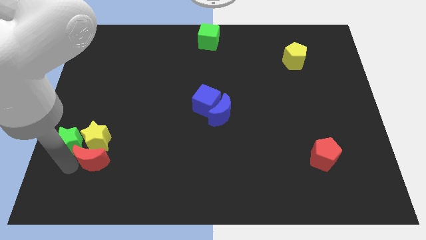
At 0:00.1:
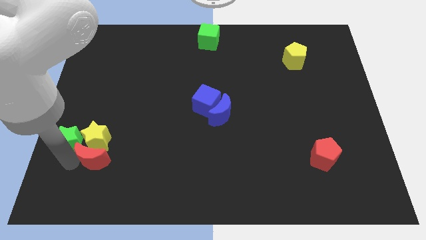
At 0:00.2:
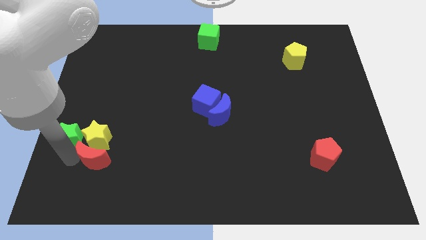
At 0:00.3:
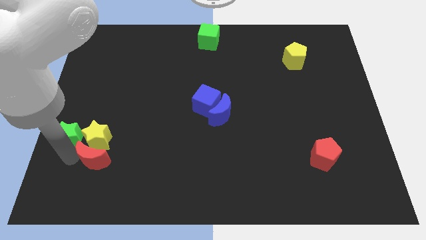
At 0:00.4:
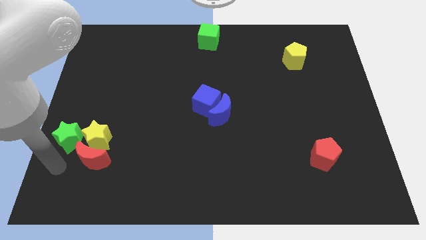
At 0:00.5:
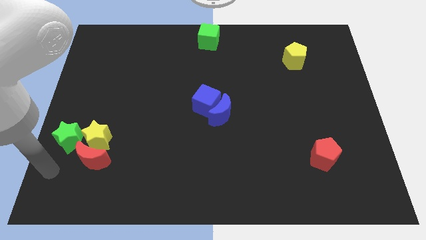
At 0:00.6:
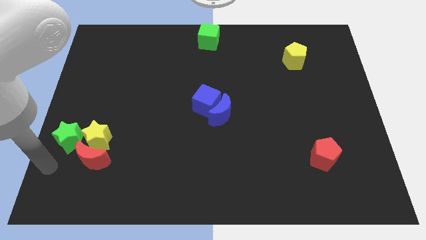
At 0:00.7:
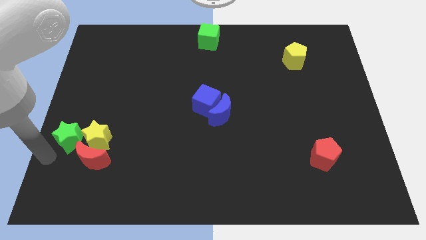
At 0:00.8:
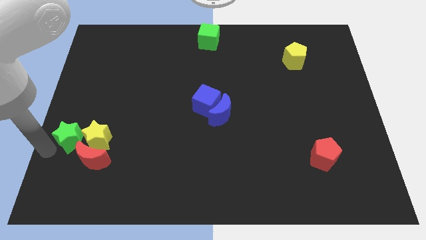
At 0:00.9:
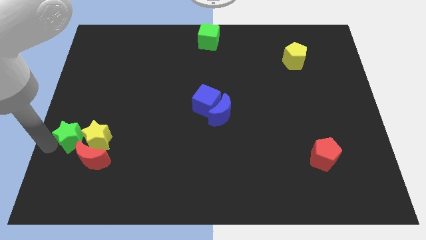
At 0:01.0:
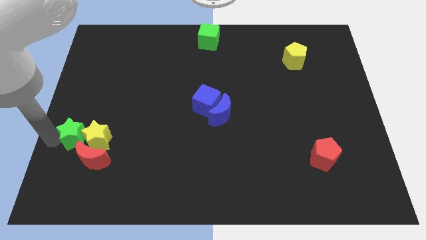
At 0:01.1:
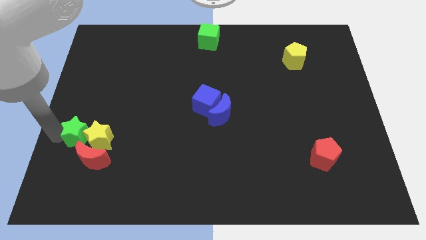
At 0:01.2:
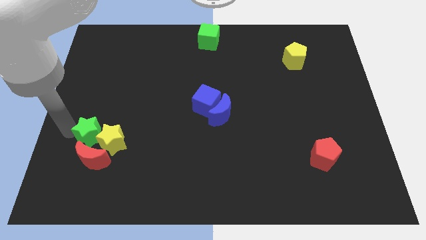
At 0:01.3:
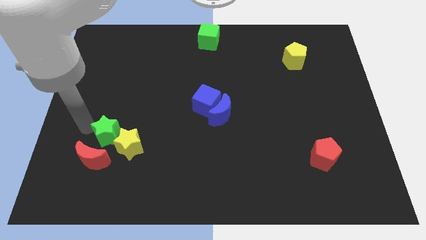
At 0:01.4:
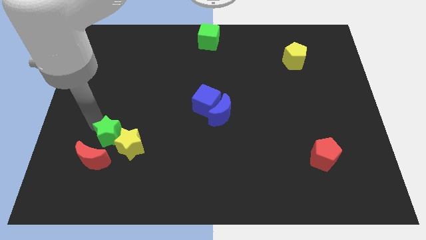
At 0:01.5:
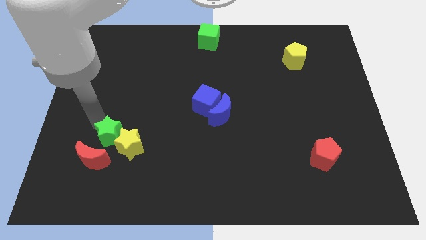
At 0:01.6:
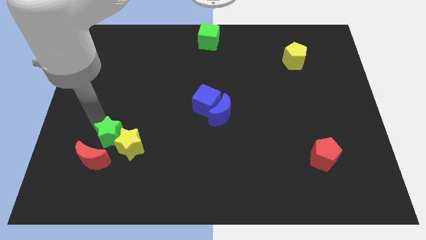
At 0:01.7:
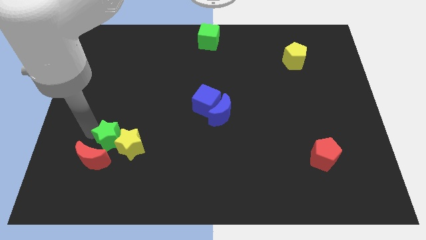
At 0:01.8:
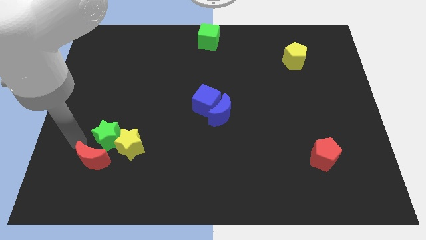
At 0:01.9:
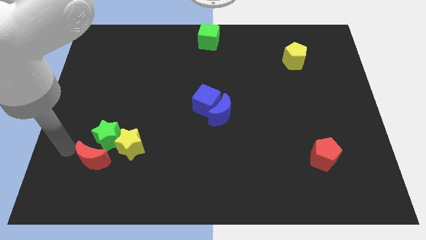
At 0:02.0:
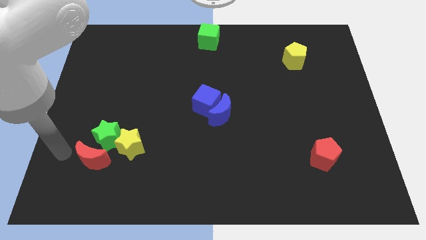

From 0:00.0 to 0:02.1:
move the green star to the right side

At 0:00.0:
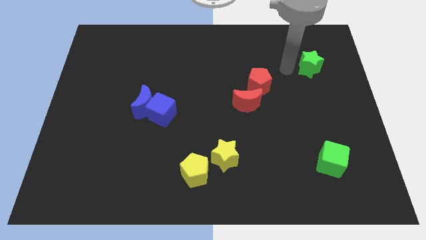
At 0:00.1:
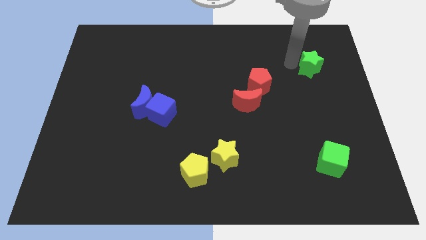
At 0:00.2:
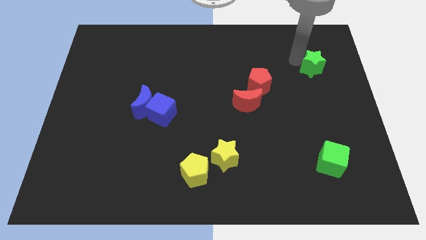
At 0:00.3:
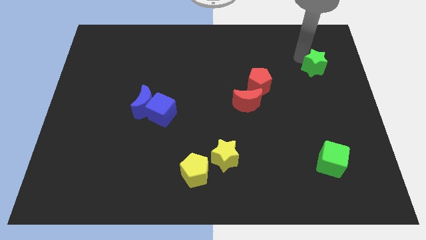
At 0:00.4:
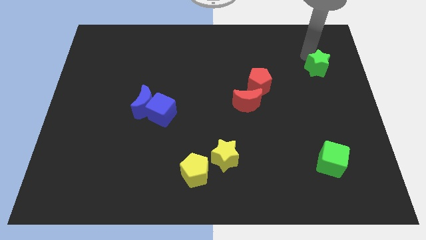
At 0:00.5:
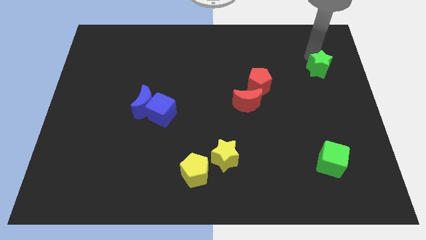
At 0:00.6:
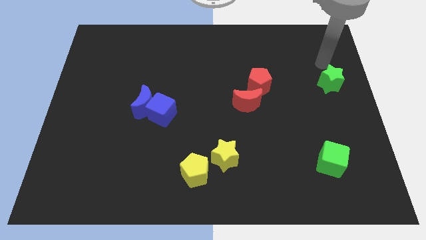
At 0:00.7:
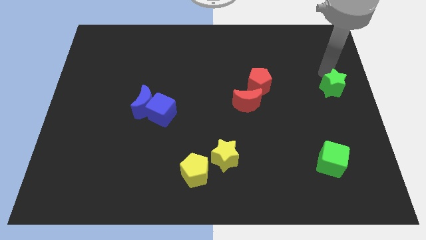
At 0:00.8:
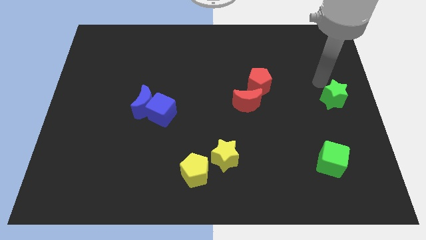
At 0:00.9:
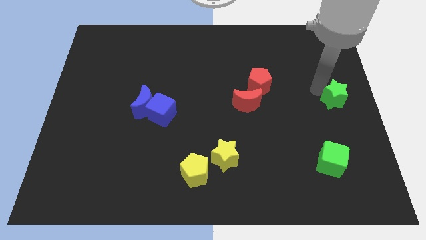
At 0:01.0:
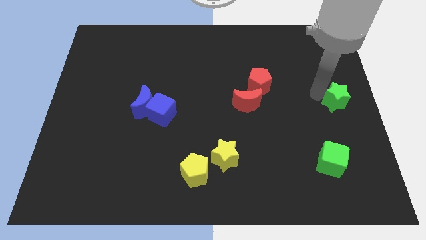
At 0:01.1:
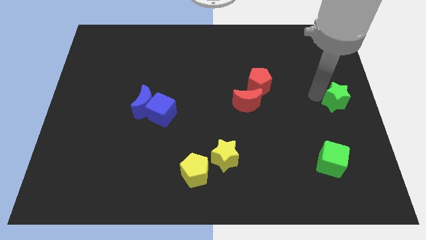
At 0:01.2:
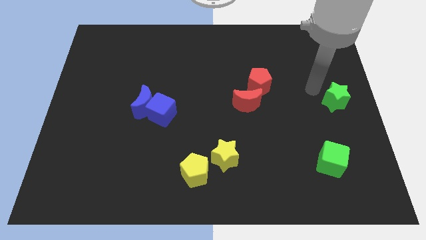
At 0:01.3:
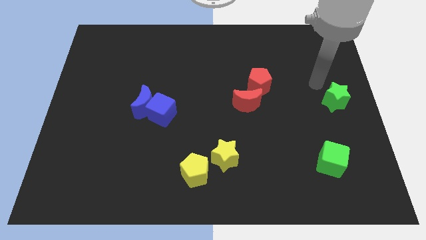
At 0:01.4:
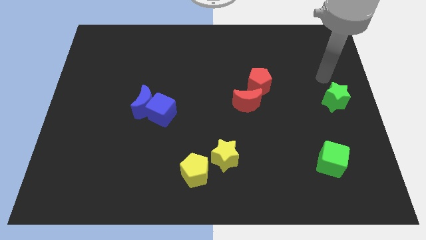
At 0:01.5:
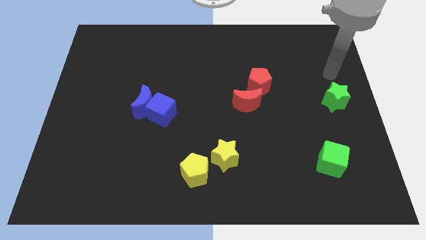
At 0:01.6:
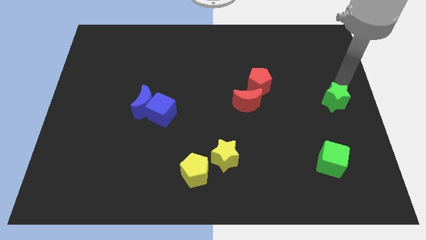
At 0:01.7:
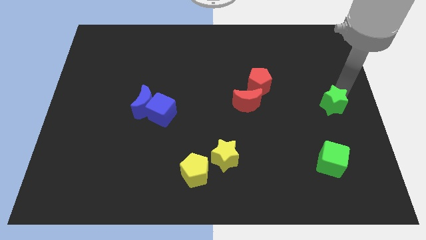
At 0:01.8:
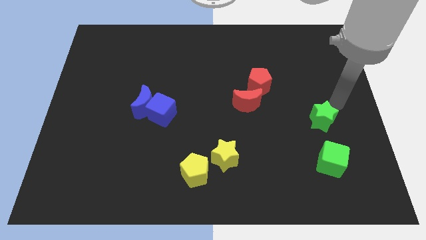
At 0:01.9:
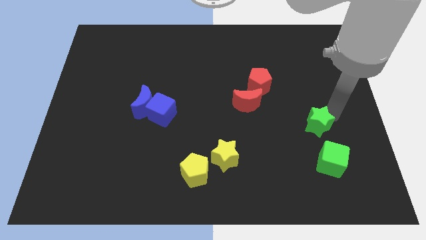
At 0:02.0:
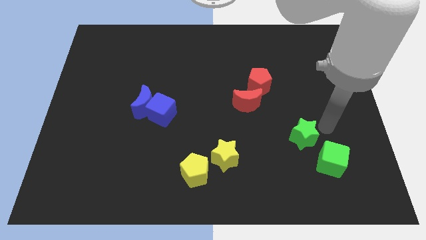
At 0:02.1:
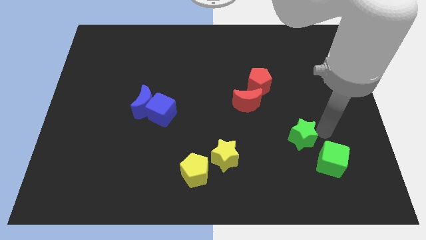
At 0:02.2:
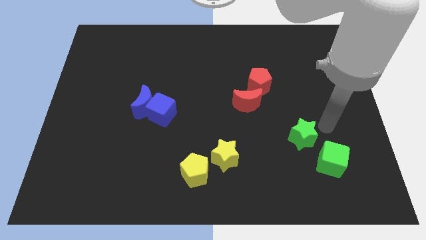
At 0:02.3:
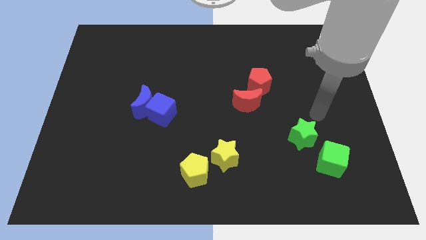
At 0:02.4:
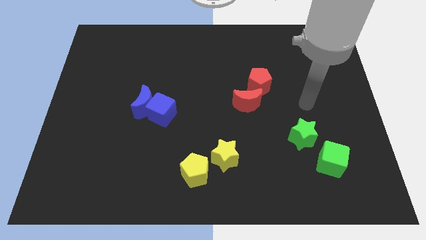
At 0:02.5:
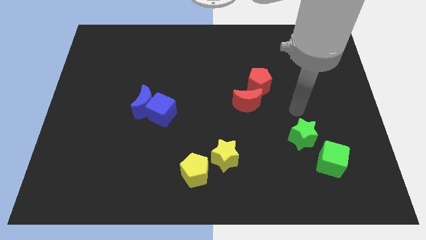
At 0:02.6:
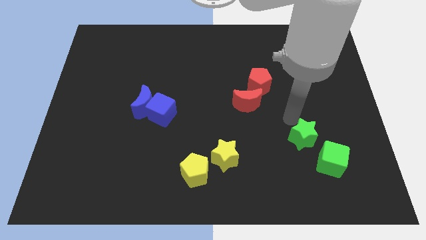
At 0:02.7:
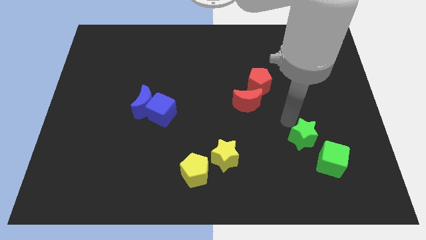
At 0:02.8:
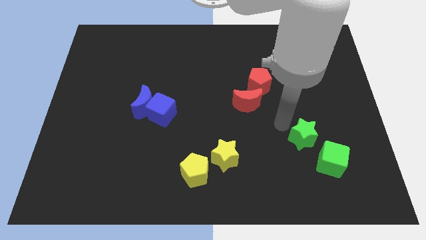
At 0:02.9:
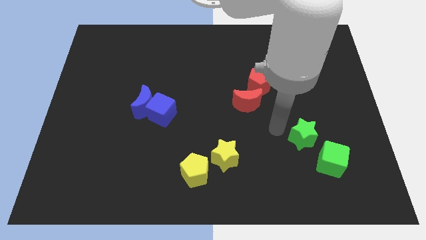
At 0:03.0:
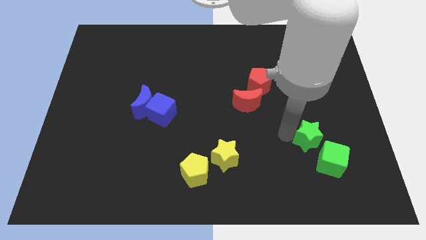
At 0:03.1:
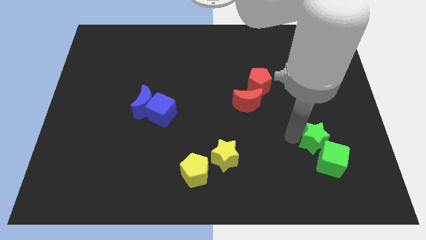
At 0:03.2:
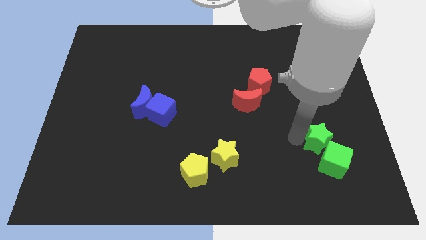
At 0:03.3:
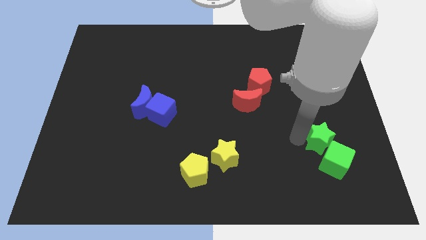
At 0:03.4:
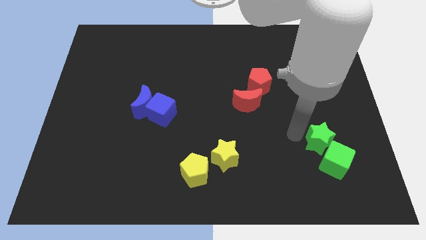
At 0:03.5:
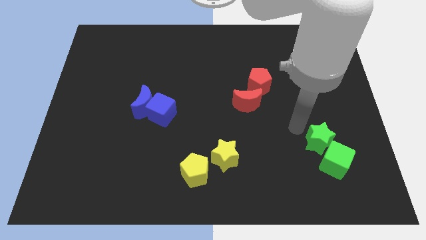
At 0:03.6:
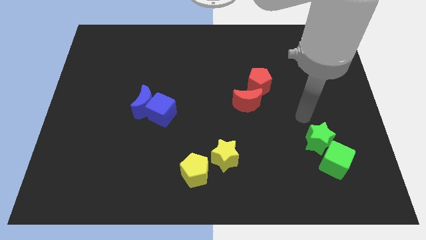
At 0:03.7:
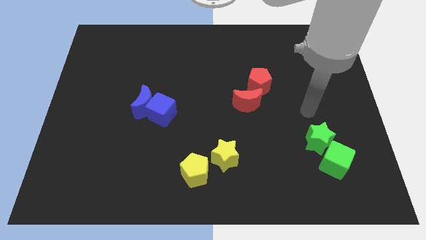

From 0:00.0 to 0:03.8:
push green star into the green cube

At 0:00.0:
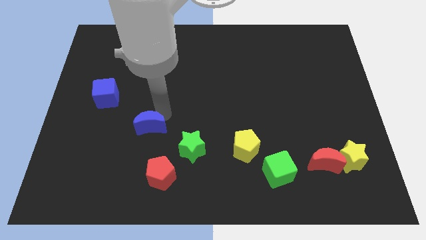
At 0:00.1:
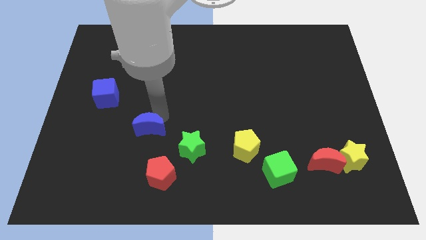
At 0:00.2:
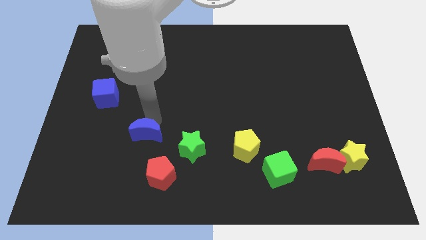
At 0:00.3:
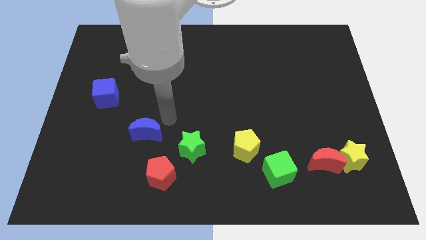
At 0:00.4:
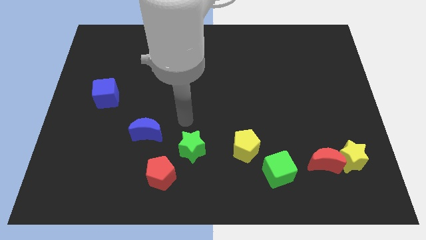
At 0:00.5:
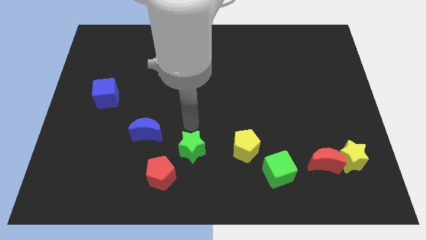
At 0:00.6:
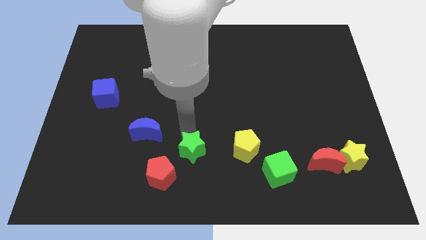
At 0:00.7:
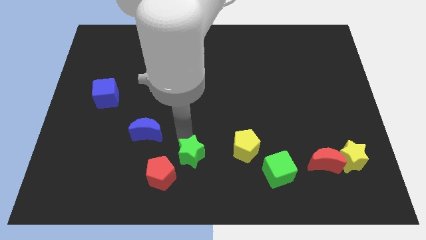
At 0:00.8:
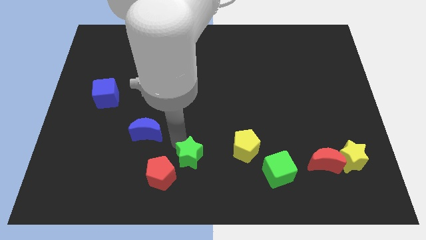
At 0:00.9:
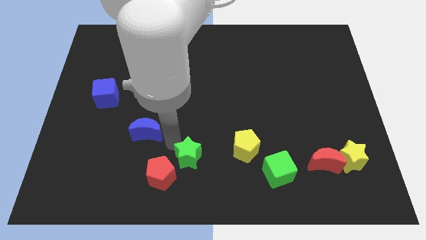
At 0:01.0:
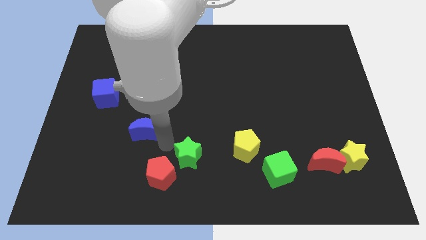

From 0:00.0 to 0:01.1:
move the green star downwards

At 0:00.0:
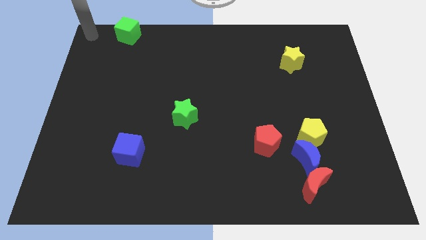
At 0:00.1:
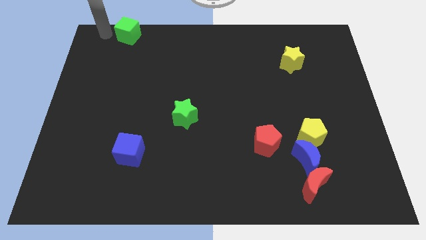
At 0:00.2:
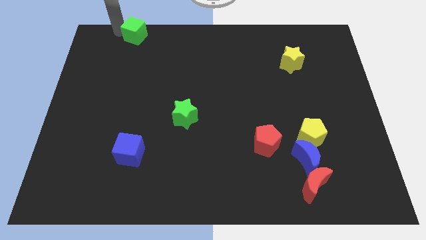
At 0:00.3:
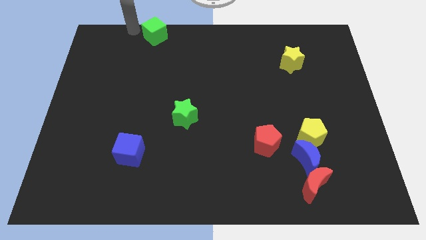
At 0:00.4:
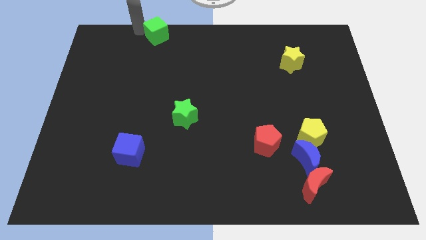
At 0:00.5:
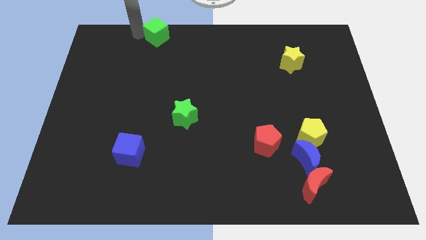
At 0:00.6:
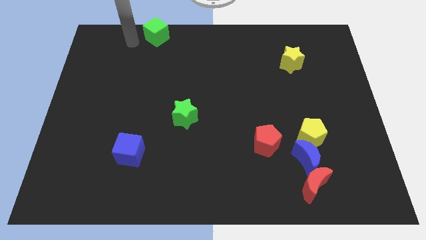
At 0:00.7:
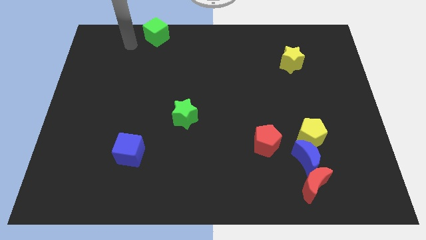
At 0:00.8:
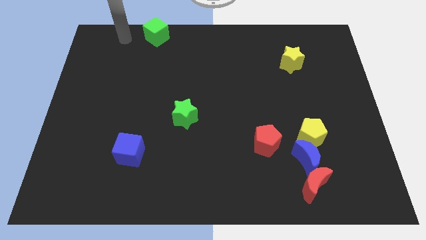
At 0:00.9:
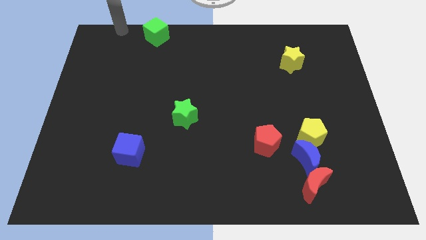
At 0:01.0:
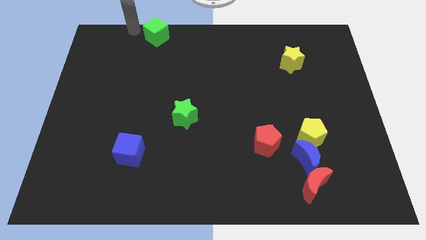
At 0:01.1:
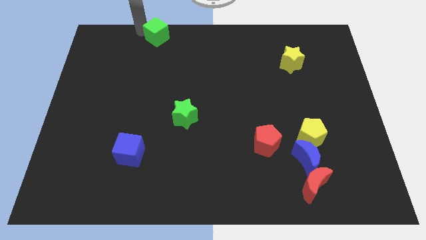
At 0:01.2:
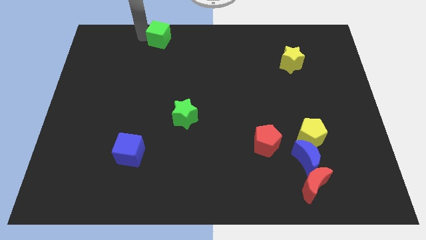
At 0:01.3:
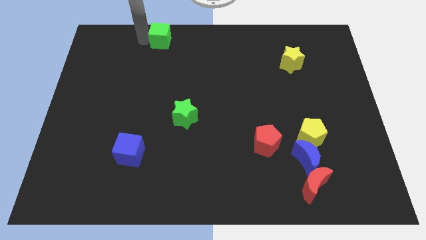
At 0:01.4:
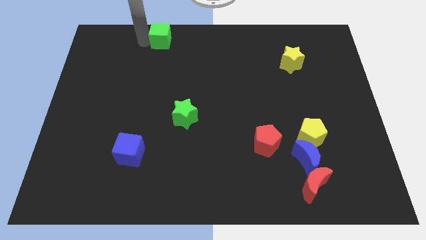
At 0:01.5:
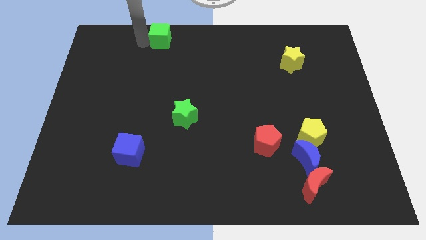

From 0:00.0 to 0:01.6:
move the green cube to the right of the board

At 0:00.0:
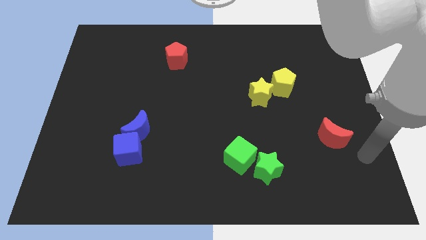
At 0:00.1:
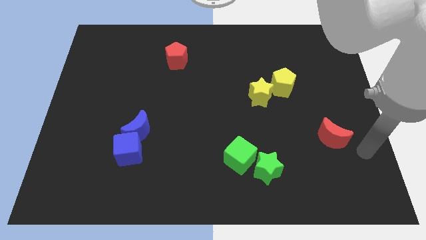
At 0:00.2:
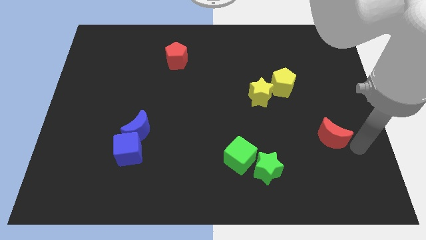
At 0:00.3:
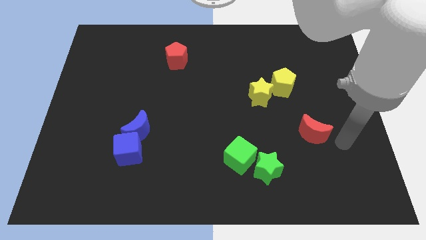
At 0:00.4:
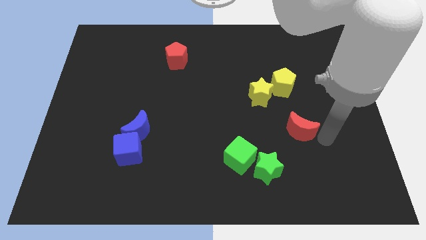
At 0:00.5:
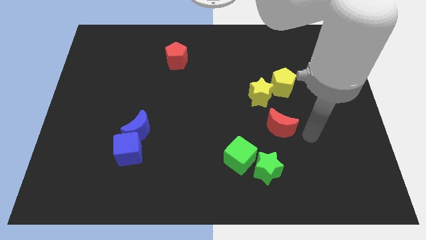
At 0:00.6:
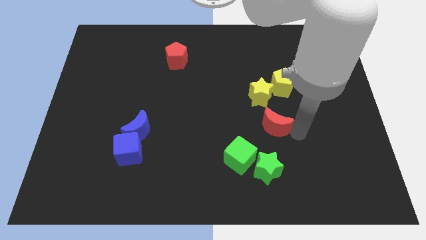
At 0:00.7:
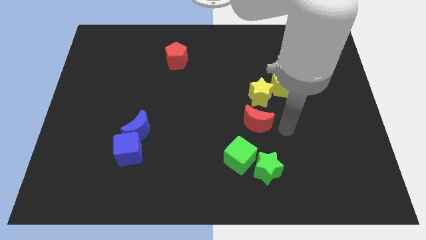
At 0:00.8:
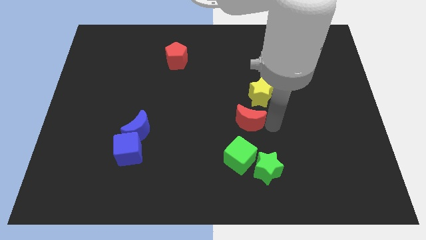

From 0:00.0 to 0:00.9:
push the red moon in between the yellow star and green cube
